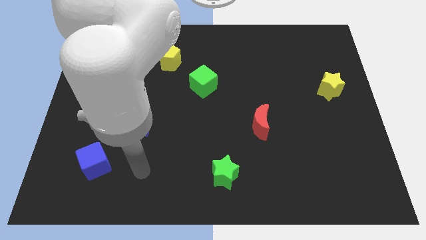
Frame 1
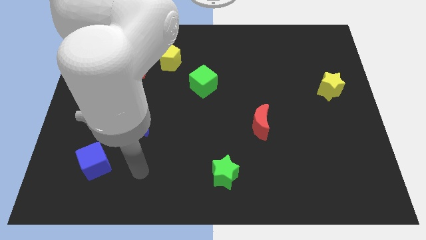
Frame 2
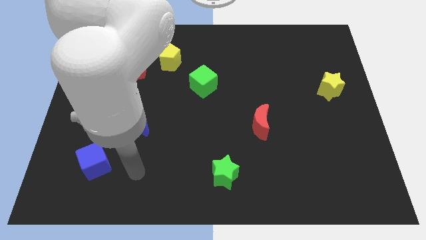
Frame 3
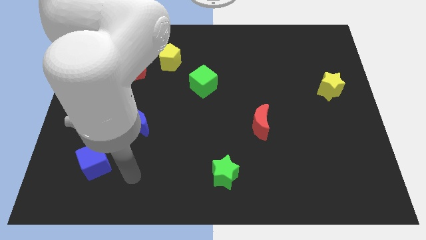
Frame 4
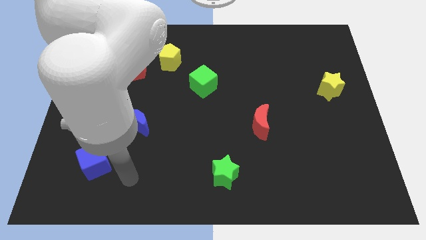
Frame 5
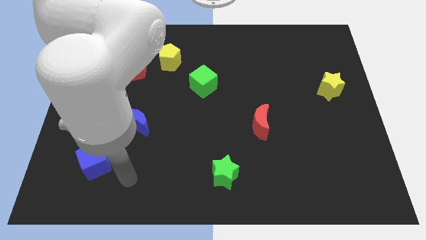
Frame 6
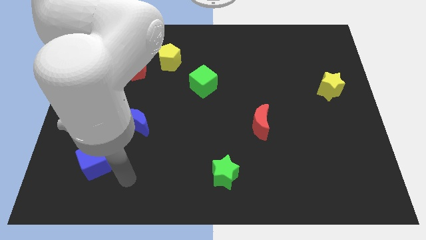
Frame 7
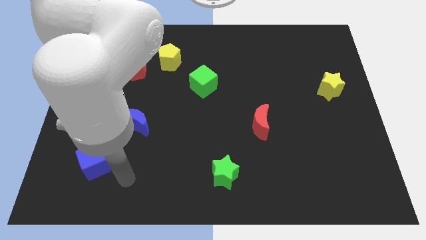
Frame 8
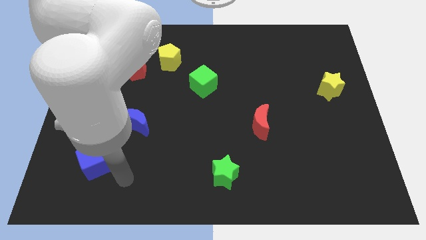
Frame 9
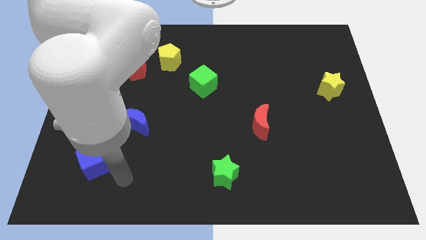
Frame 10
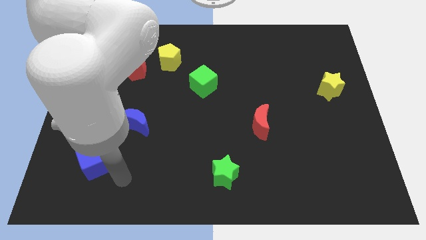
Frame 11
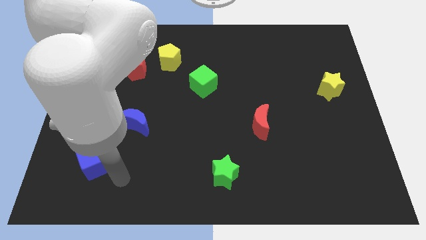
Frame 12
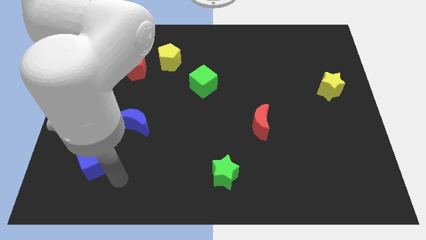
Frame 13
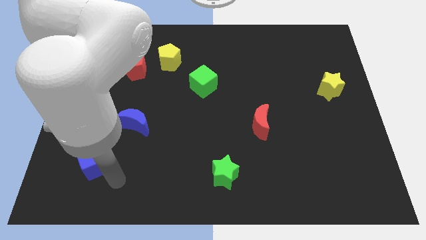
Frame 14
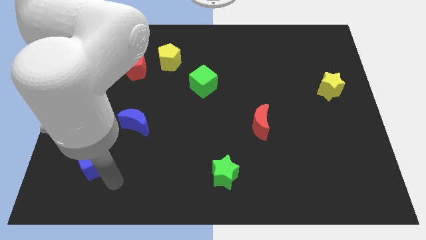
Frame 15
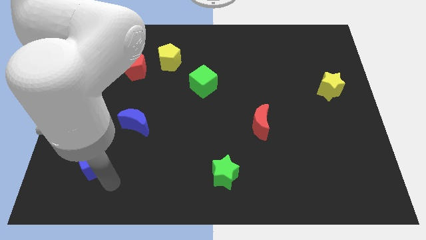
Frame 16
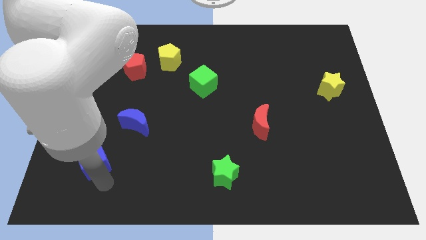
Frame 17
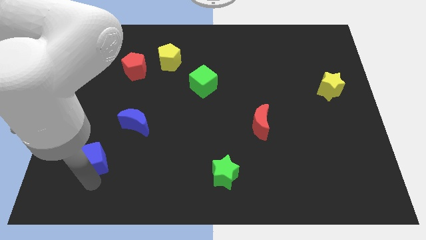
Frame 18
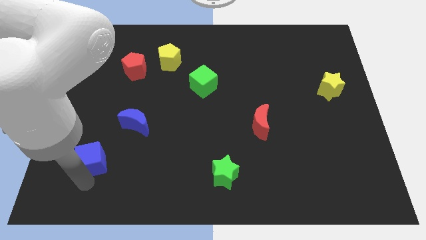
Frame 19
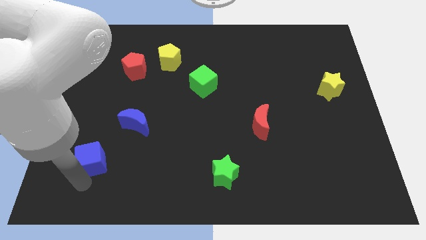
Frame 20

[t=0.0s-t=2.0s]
move your arm towards the blue cube

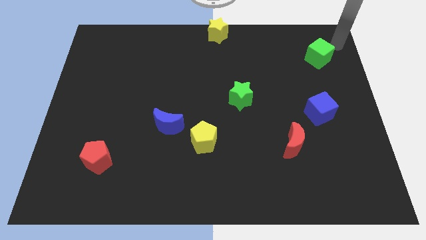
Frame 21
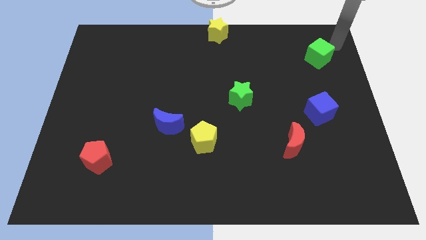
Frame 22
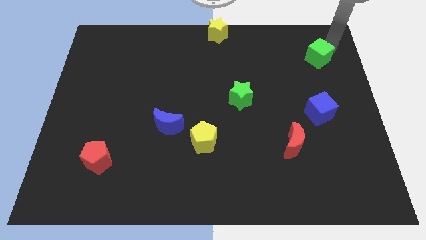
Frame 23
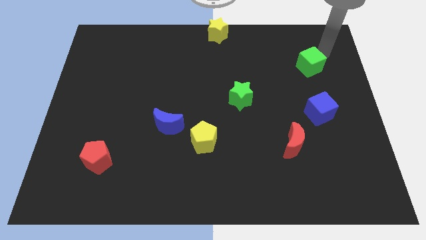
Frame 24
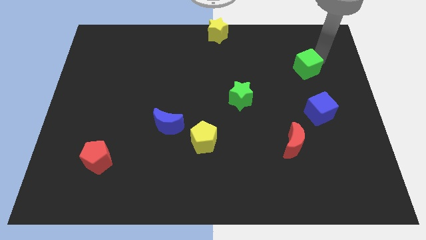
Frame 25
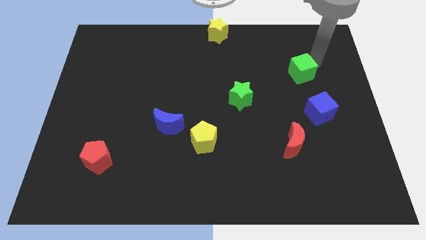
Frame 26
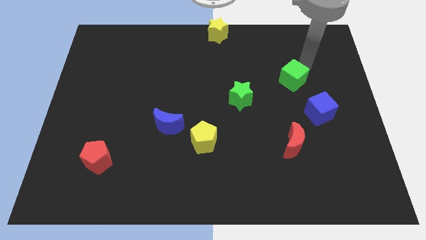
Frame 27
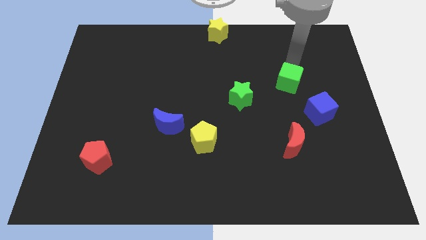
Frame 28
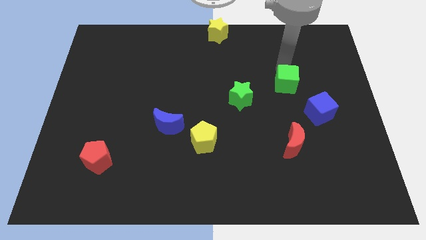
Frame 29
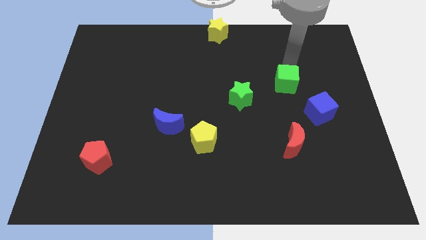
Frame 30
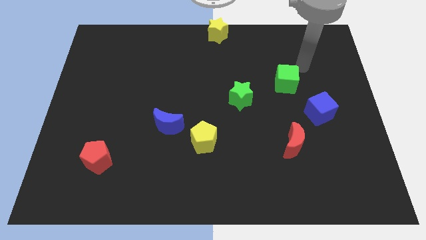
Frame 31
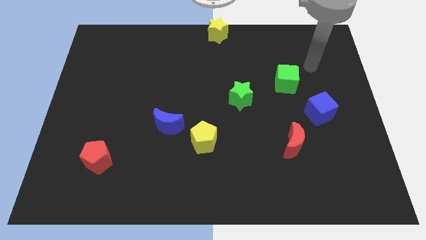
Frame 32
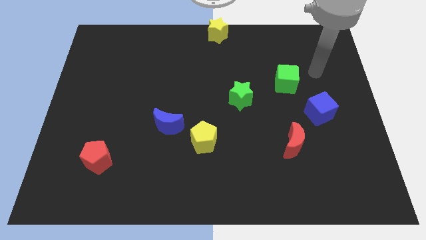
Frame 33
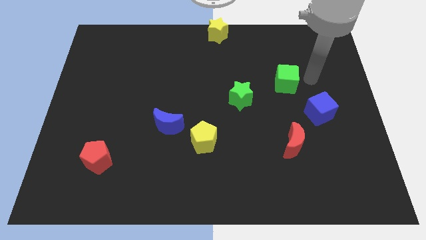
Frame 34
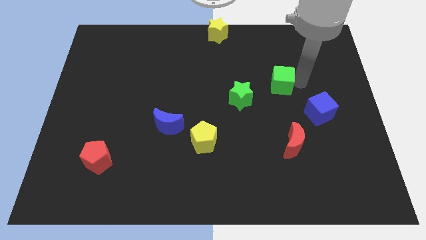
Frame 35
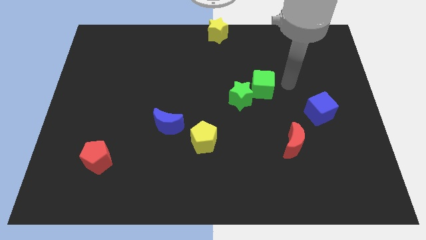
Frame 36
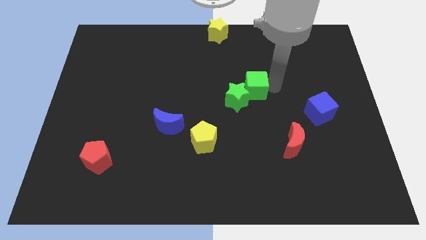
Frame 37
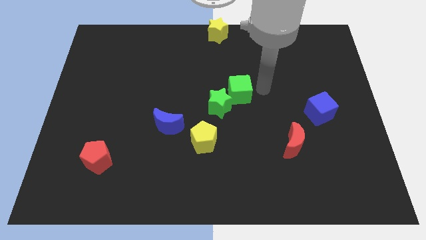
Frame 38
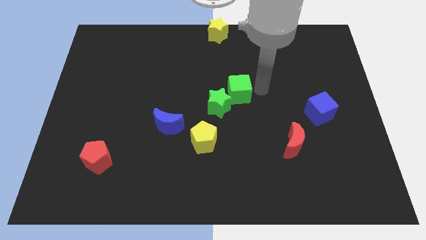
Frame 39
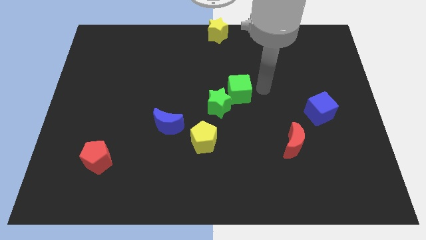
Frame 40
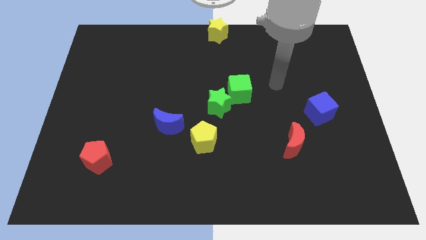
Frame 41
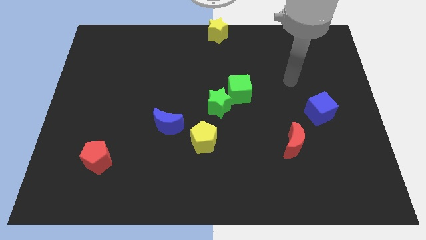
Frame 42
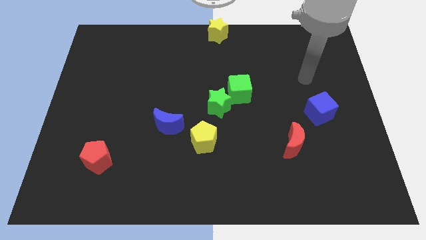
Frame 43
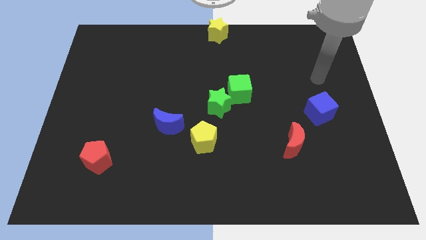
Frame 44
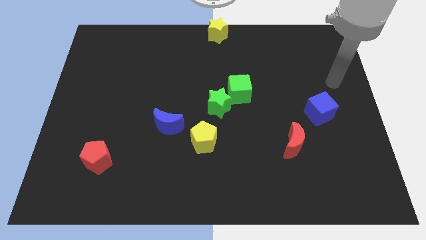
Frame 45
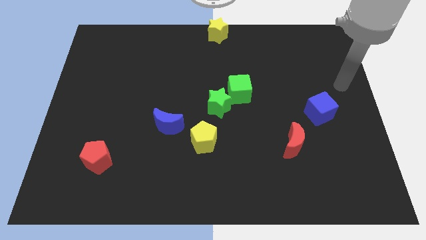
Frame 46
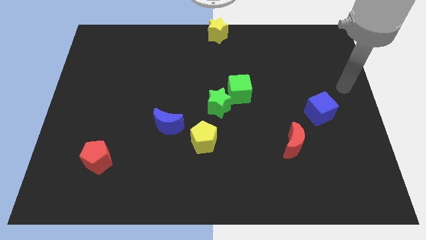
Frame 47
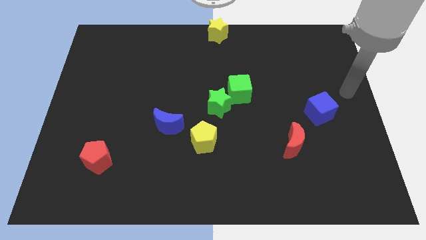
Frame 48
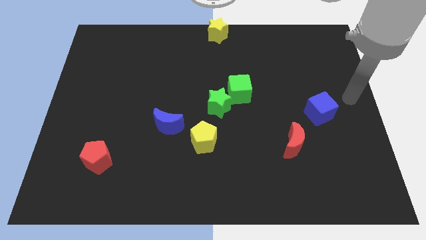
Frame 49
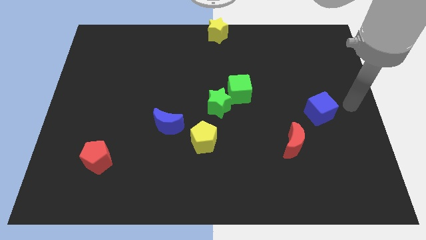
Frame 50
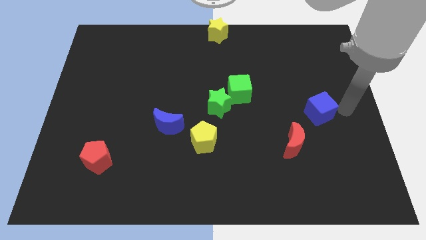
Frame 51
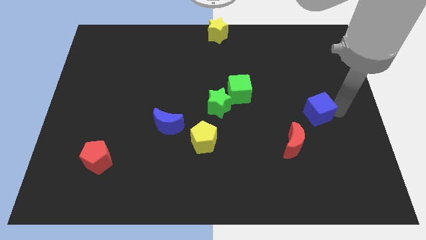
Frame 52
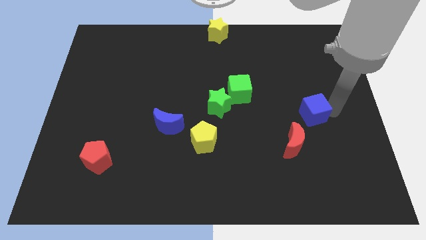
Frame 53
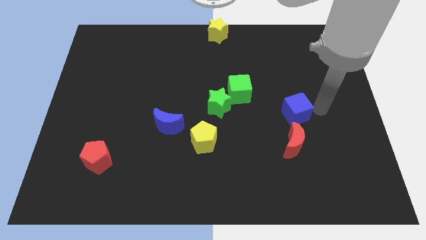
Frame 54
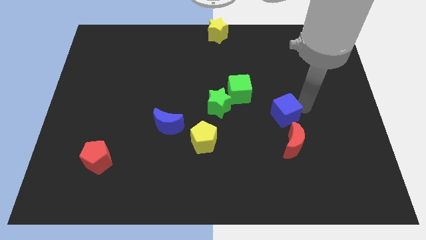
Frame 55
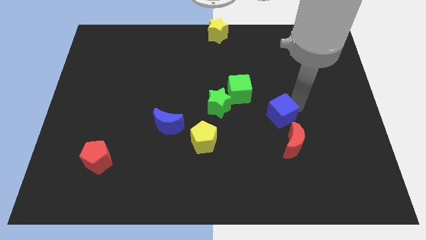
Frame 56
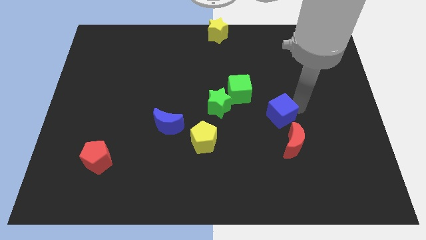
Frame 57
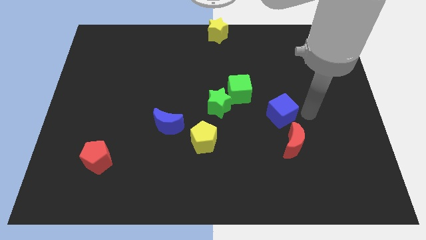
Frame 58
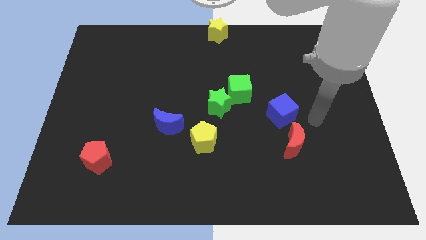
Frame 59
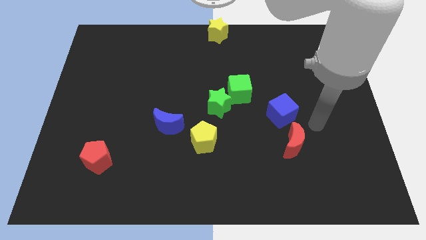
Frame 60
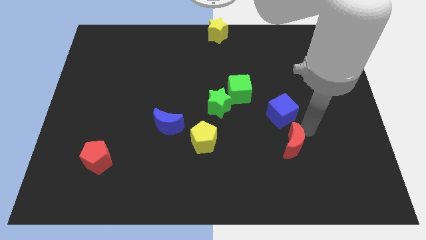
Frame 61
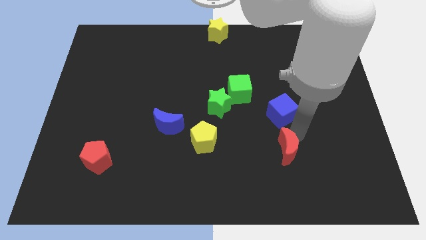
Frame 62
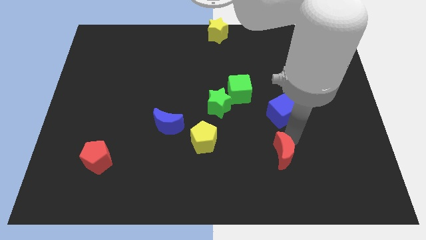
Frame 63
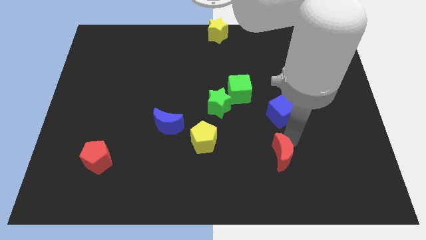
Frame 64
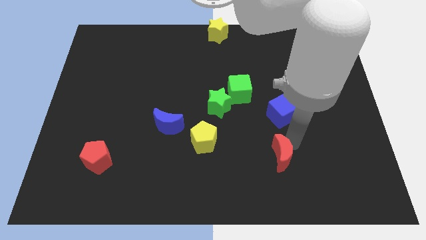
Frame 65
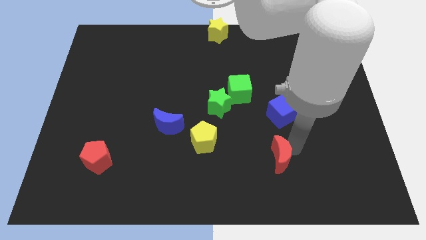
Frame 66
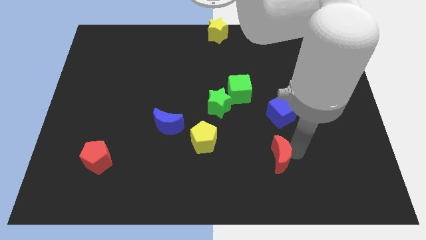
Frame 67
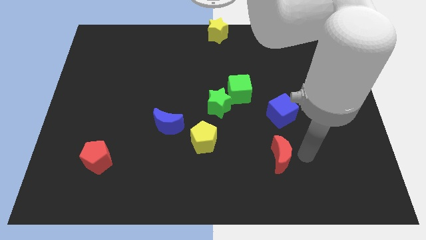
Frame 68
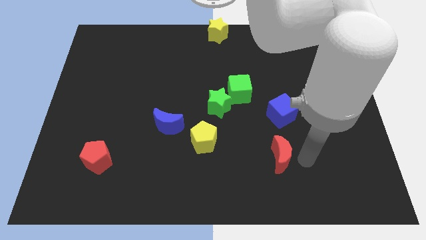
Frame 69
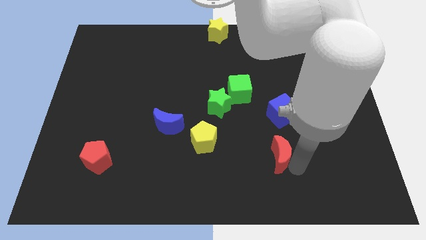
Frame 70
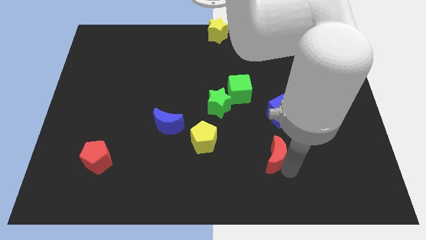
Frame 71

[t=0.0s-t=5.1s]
move the green cube close to green star

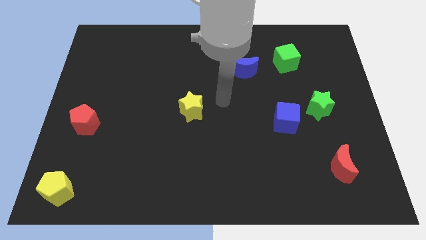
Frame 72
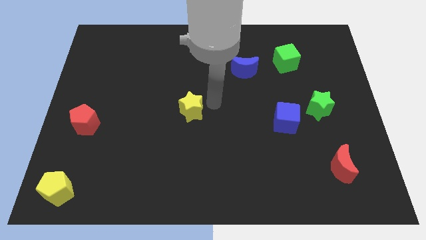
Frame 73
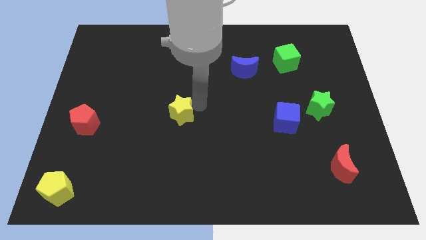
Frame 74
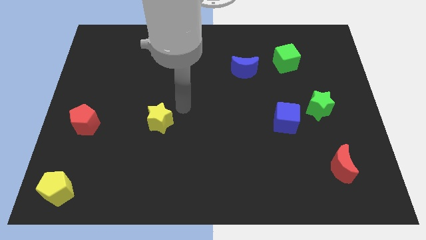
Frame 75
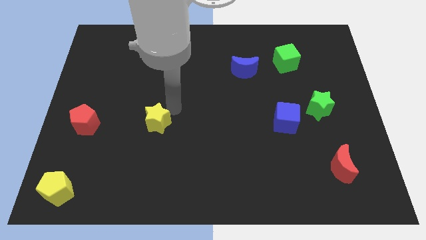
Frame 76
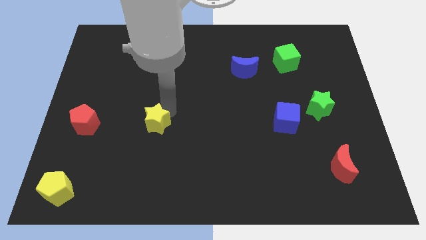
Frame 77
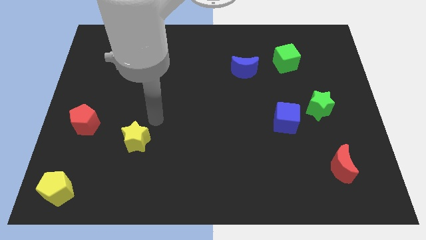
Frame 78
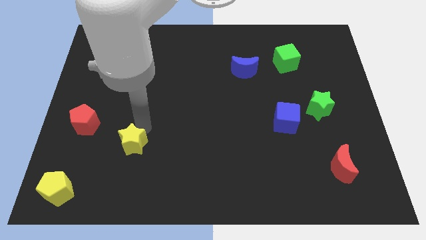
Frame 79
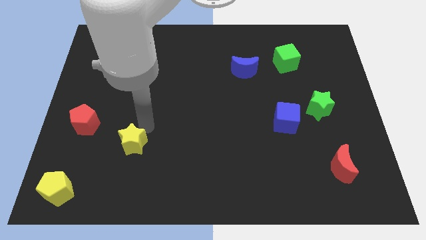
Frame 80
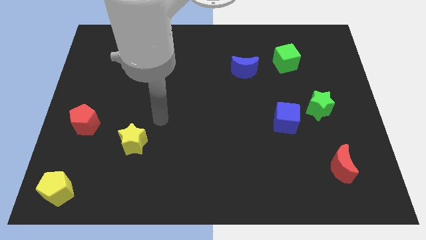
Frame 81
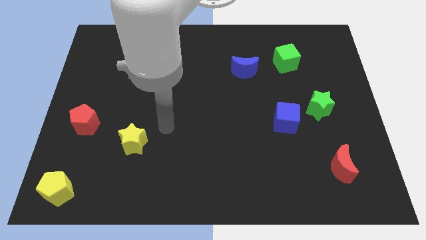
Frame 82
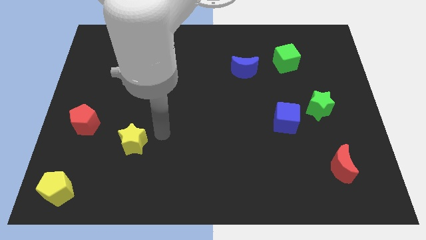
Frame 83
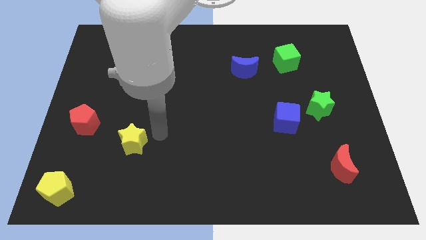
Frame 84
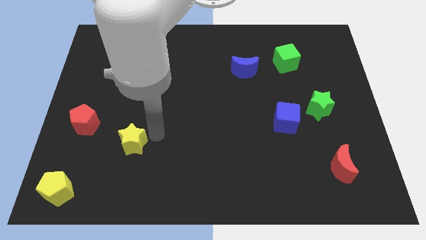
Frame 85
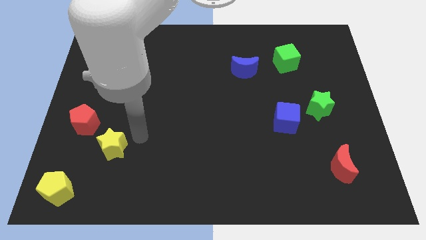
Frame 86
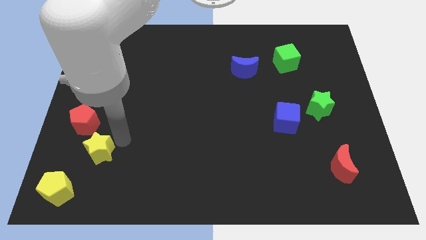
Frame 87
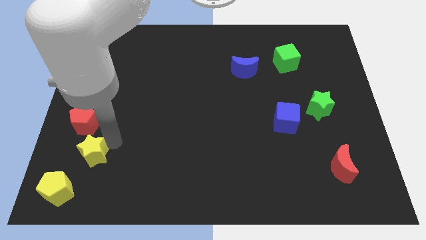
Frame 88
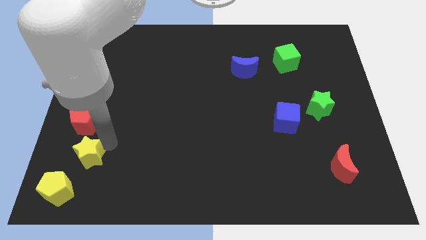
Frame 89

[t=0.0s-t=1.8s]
drag the yellow star towards the bottom left

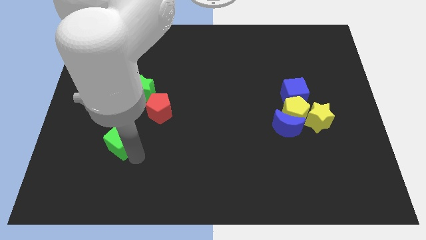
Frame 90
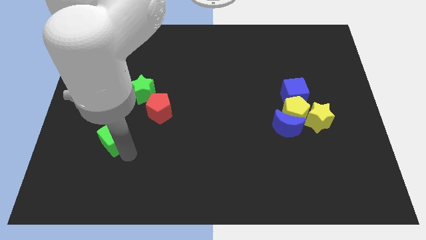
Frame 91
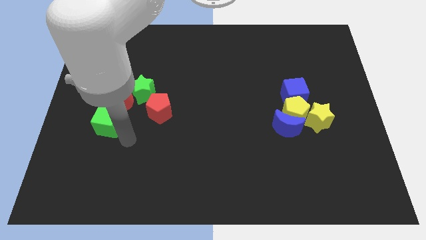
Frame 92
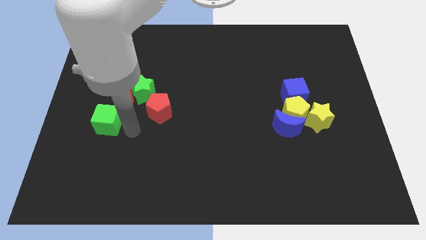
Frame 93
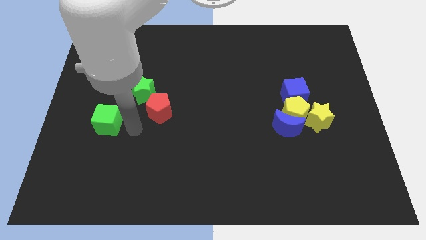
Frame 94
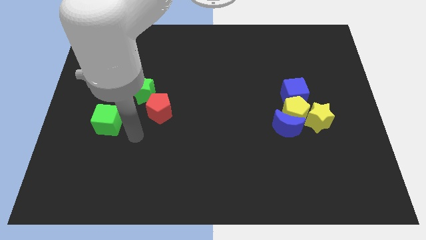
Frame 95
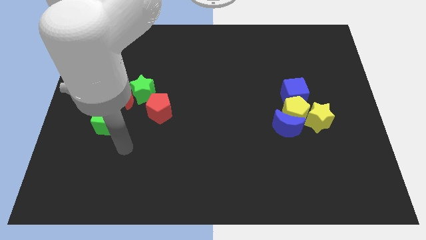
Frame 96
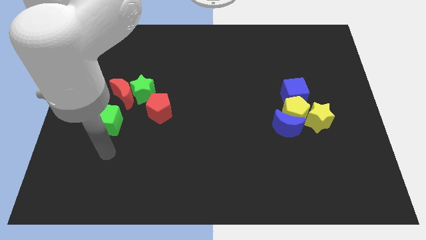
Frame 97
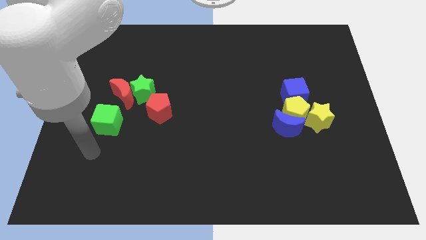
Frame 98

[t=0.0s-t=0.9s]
push the green cube below the red moon
